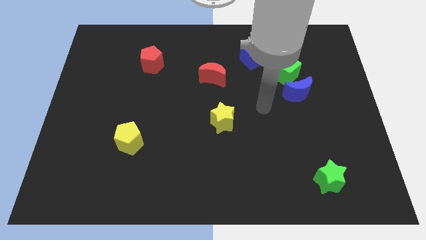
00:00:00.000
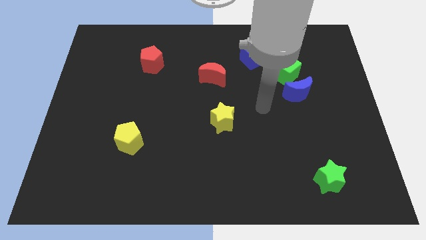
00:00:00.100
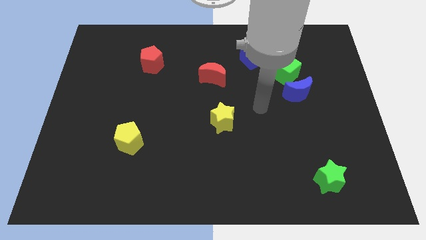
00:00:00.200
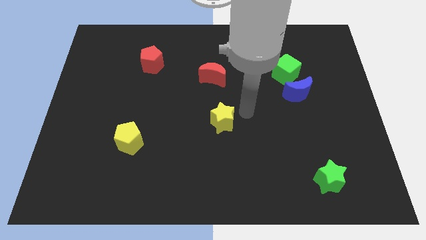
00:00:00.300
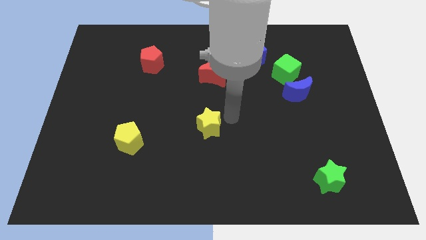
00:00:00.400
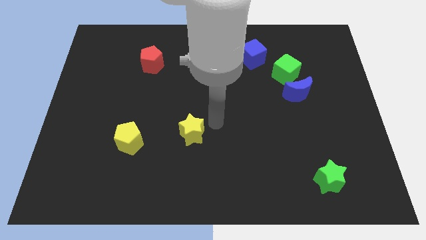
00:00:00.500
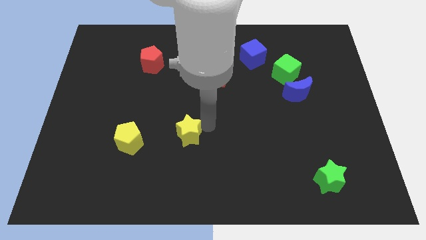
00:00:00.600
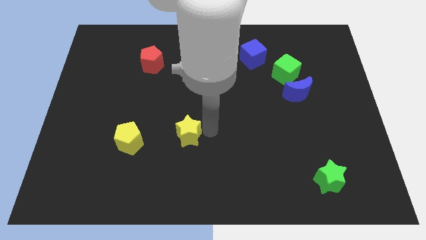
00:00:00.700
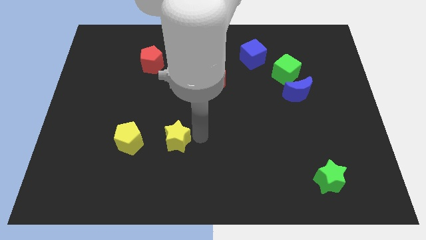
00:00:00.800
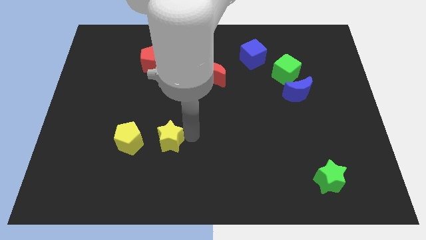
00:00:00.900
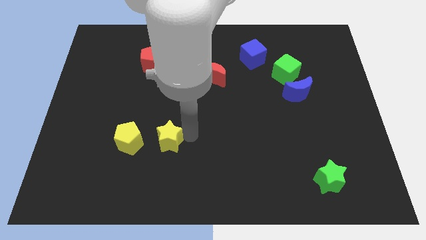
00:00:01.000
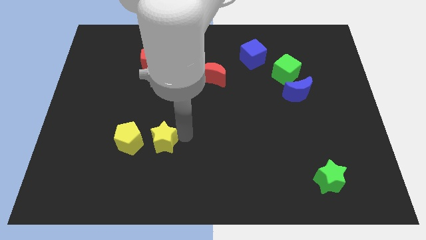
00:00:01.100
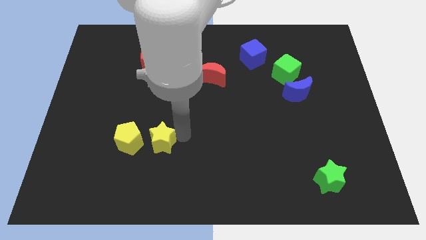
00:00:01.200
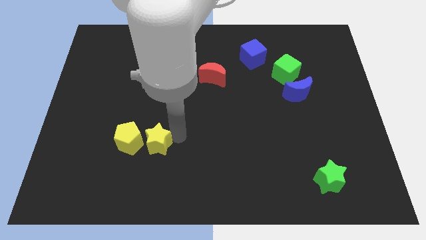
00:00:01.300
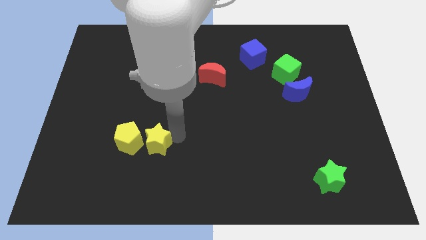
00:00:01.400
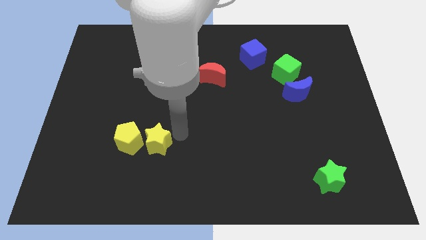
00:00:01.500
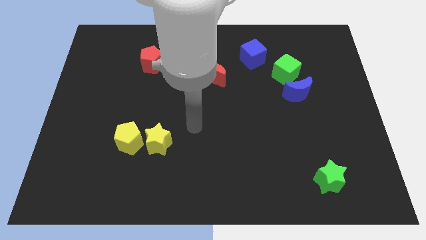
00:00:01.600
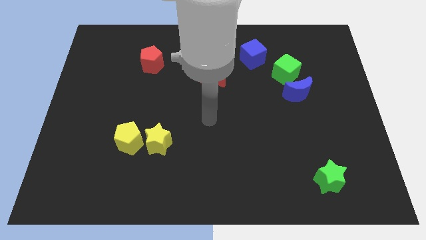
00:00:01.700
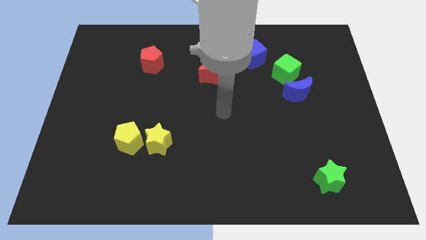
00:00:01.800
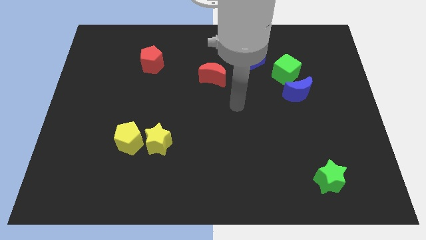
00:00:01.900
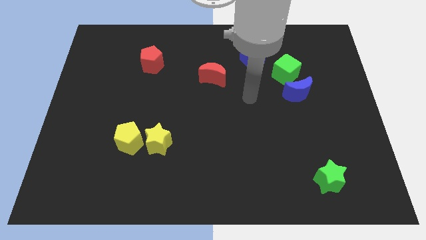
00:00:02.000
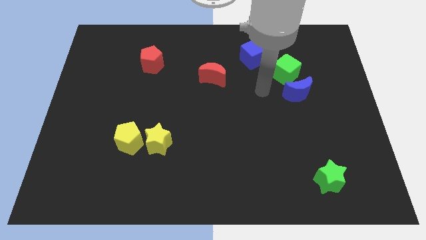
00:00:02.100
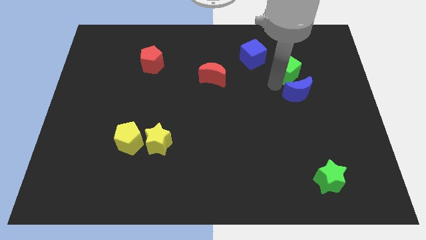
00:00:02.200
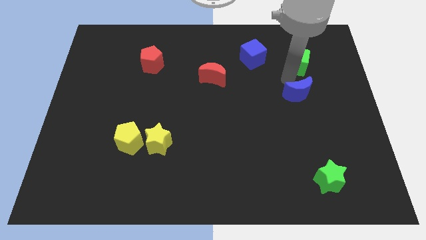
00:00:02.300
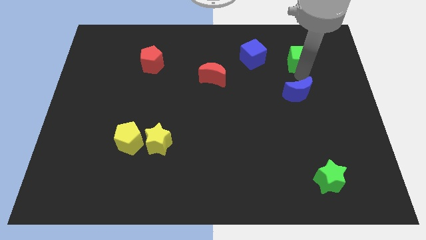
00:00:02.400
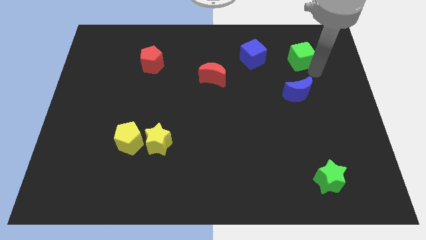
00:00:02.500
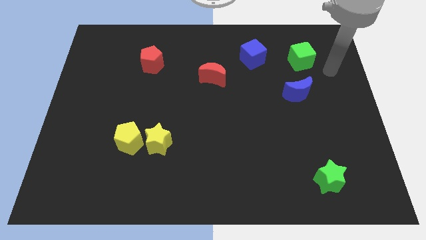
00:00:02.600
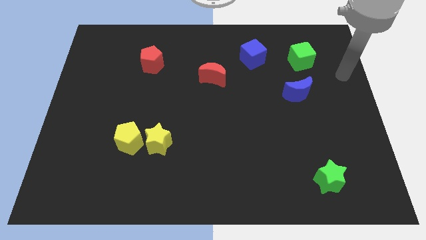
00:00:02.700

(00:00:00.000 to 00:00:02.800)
push yellow star beside yellow pentagon

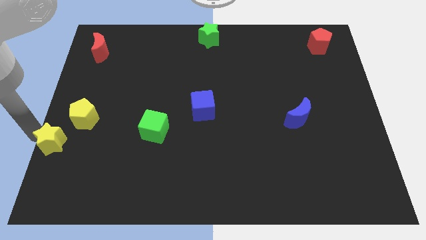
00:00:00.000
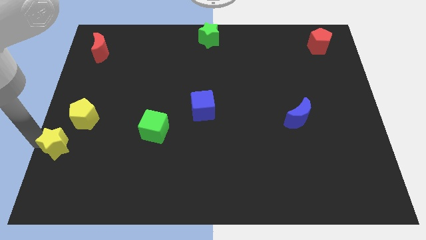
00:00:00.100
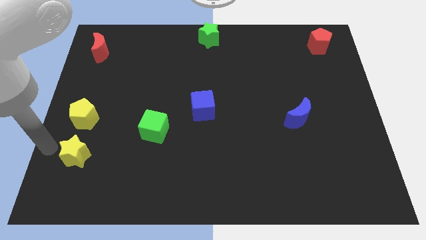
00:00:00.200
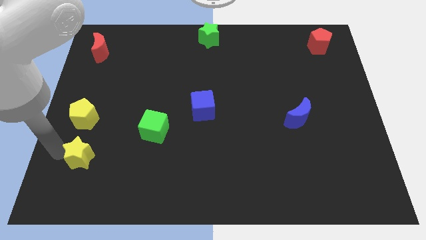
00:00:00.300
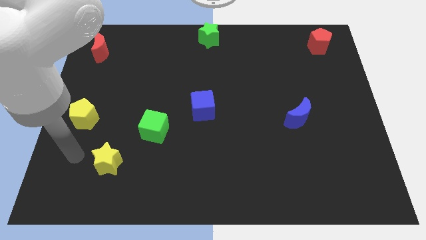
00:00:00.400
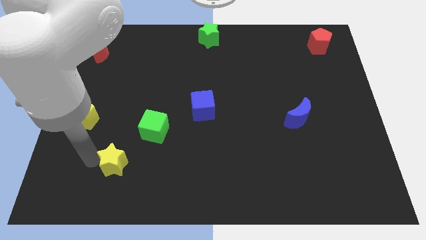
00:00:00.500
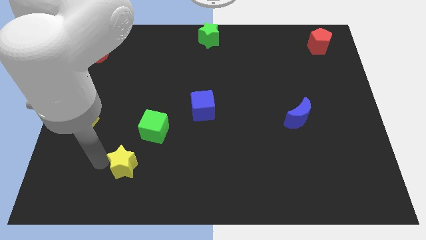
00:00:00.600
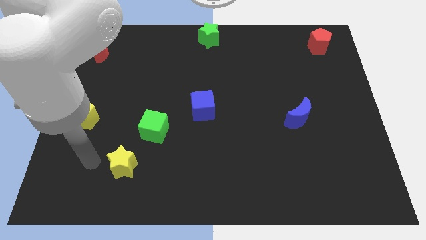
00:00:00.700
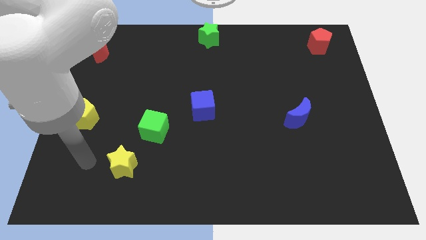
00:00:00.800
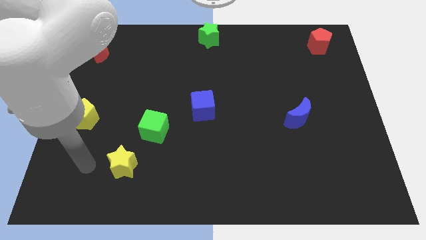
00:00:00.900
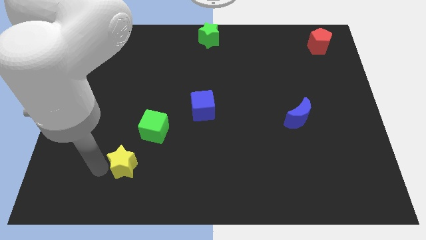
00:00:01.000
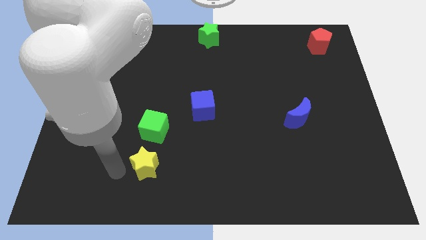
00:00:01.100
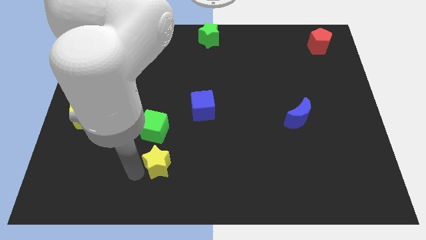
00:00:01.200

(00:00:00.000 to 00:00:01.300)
move the yellow star to the bottom of the green cube

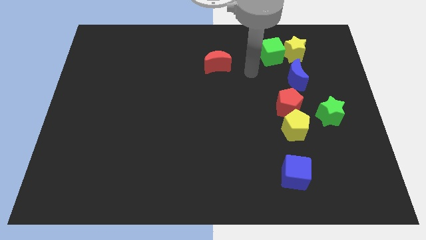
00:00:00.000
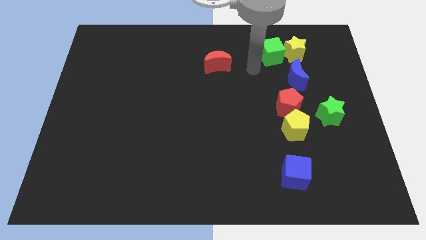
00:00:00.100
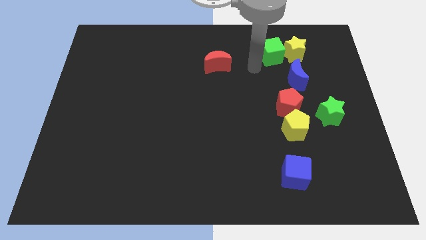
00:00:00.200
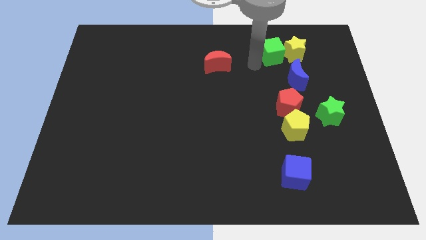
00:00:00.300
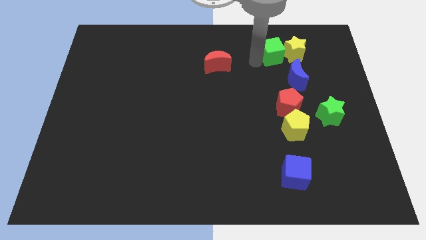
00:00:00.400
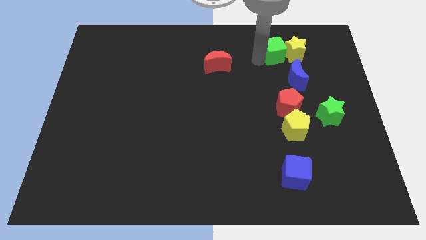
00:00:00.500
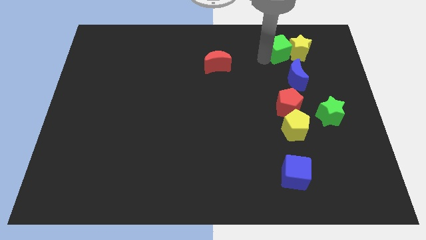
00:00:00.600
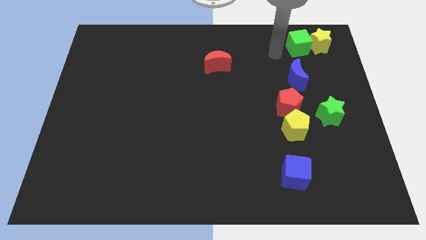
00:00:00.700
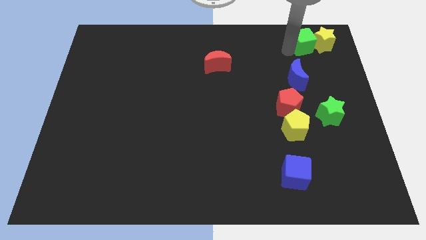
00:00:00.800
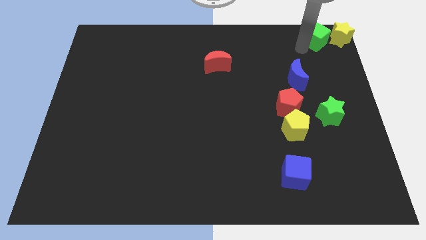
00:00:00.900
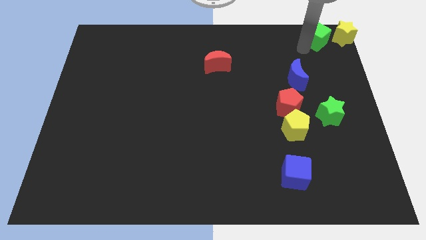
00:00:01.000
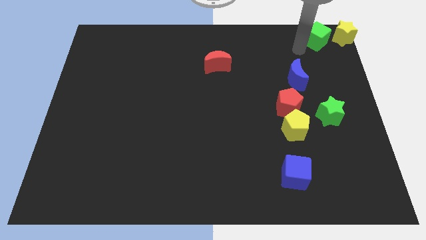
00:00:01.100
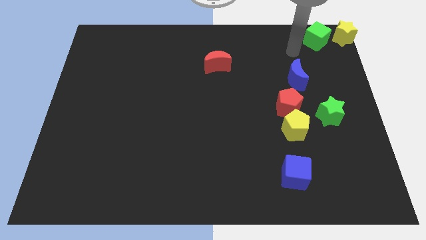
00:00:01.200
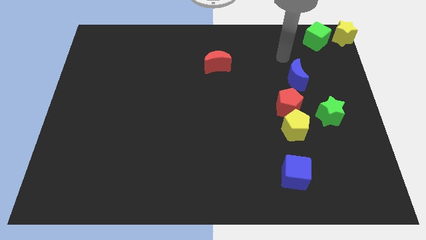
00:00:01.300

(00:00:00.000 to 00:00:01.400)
move the yellow star and green cube to top right

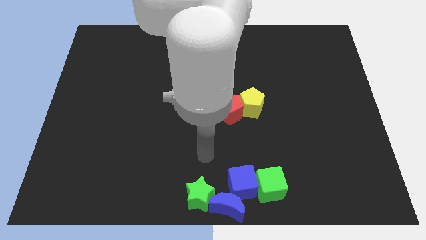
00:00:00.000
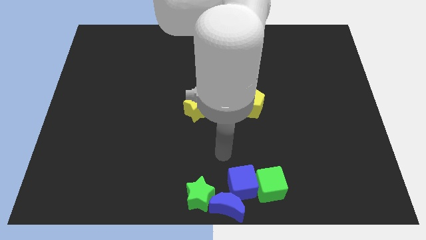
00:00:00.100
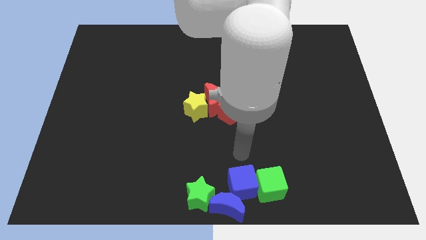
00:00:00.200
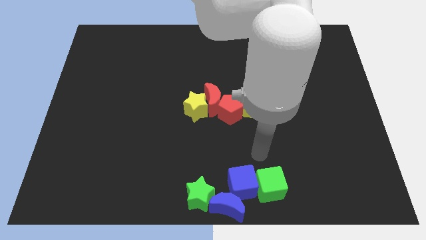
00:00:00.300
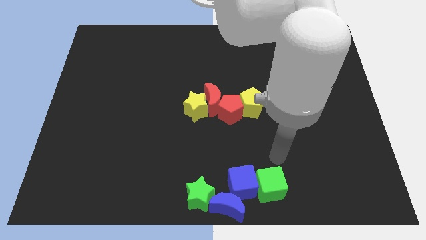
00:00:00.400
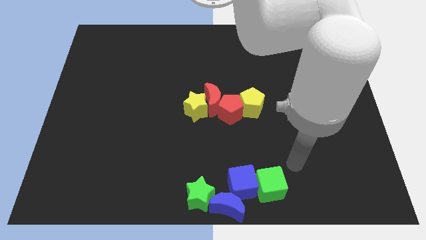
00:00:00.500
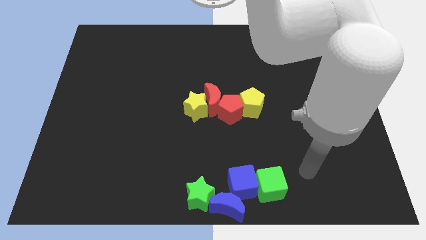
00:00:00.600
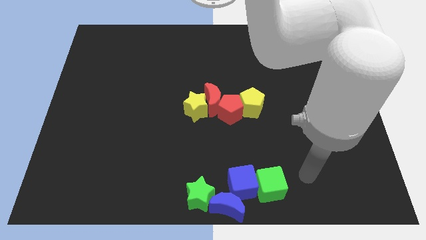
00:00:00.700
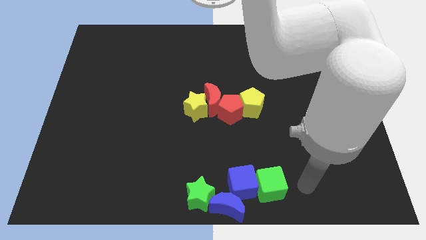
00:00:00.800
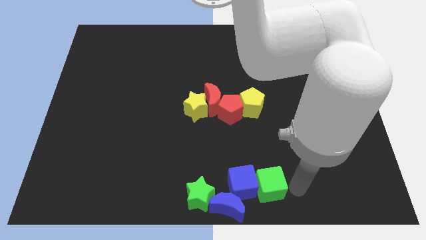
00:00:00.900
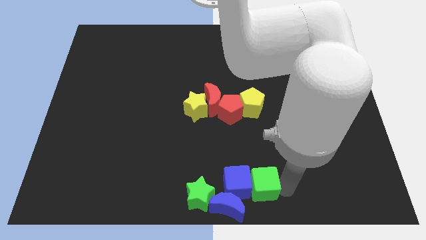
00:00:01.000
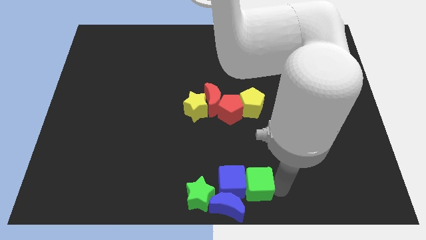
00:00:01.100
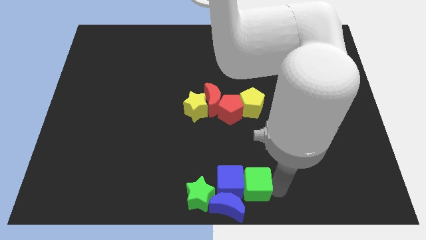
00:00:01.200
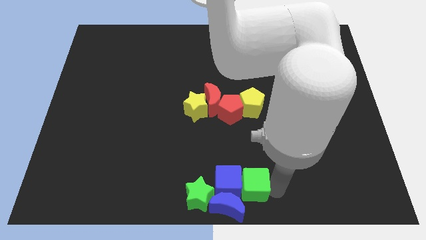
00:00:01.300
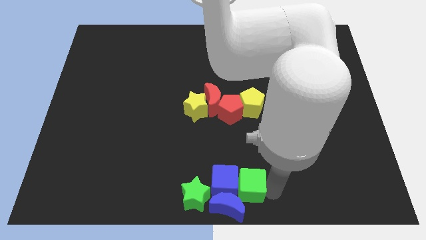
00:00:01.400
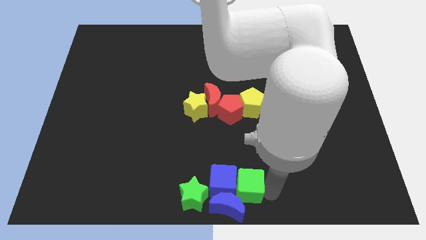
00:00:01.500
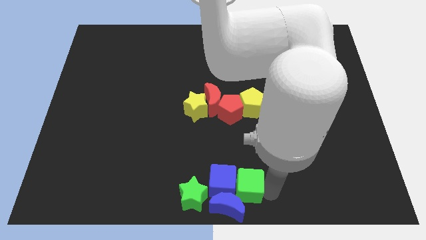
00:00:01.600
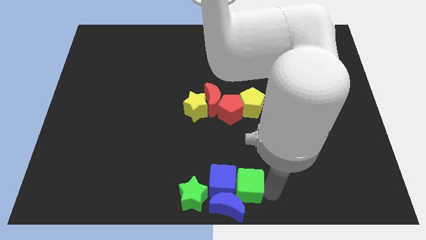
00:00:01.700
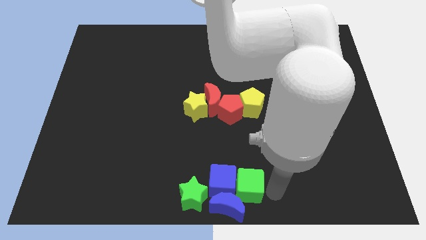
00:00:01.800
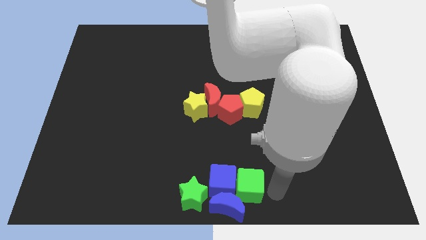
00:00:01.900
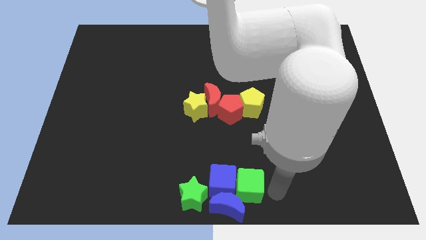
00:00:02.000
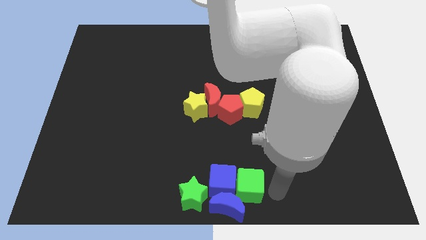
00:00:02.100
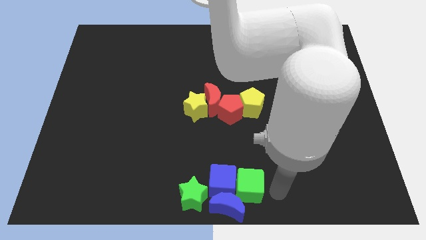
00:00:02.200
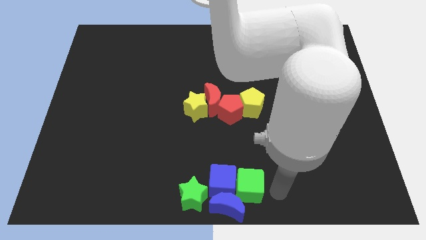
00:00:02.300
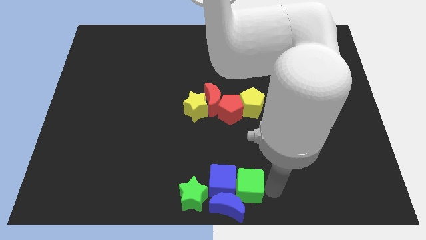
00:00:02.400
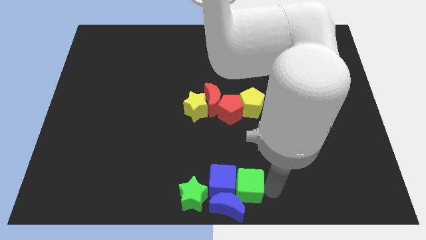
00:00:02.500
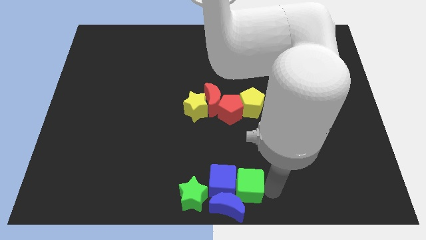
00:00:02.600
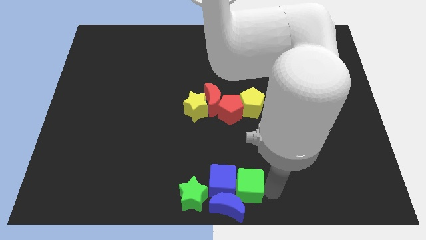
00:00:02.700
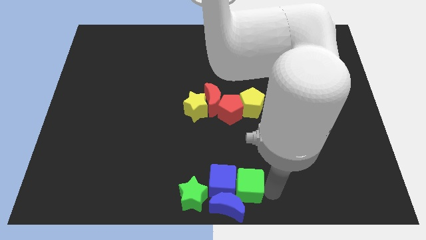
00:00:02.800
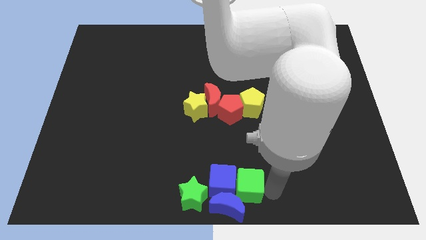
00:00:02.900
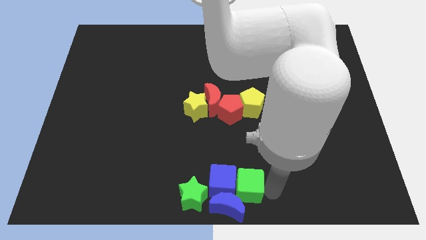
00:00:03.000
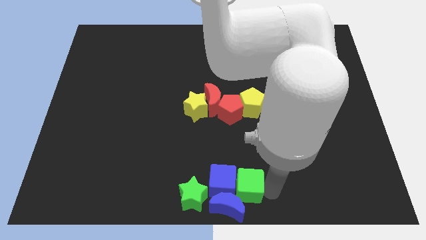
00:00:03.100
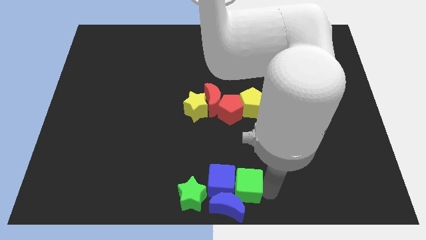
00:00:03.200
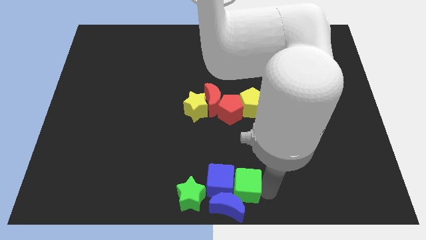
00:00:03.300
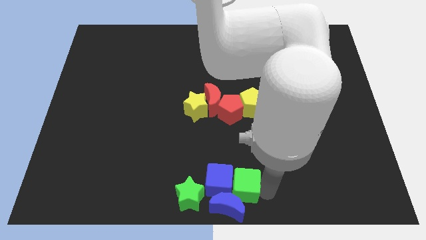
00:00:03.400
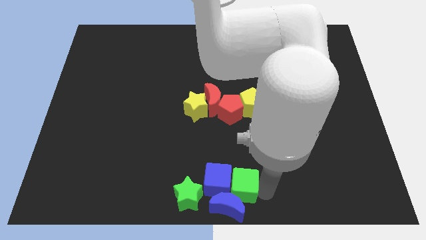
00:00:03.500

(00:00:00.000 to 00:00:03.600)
push green star towards center
